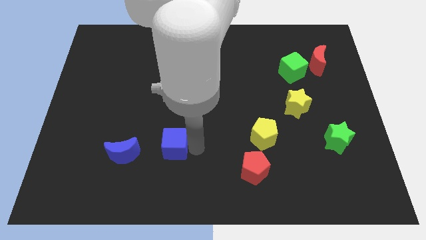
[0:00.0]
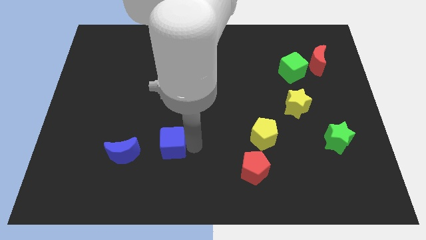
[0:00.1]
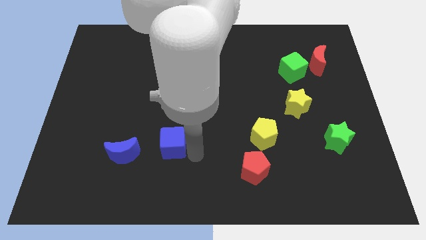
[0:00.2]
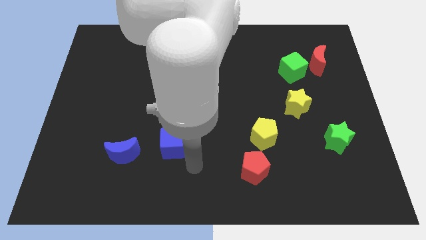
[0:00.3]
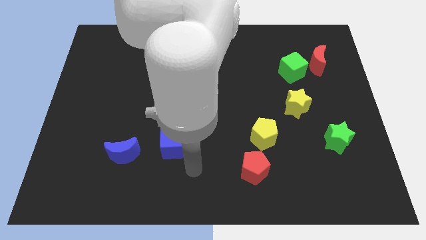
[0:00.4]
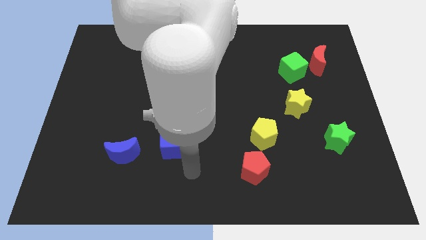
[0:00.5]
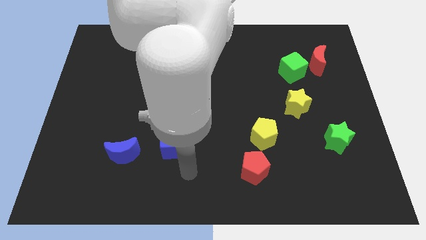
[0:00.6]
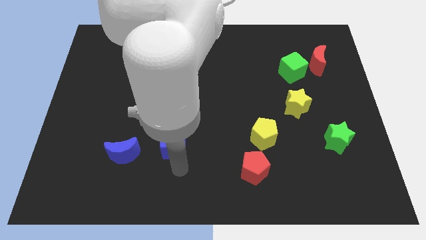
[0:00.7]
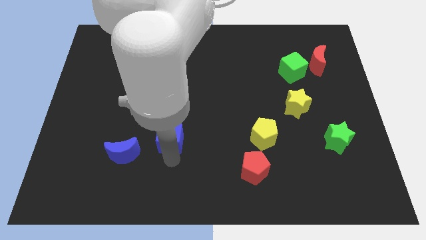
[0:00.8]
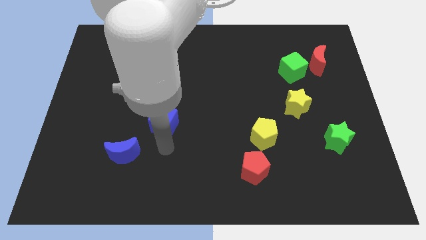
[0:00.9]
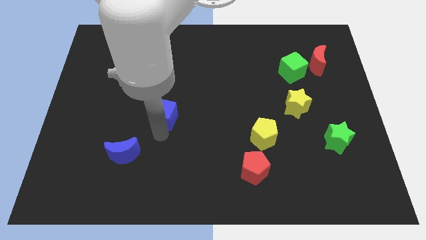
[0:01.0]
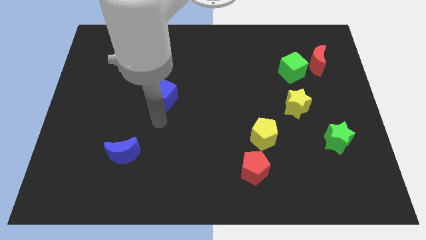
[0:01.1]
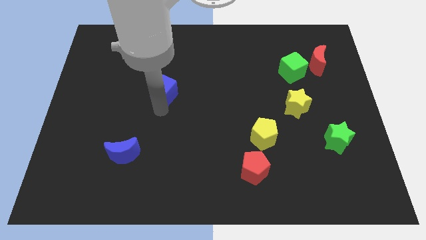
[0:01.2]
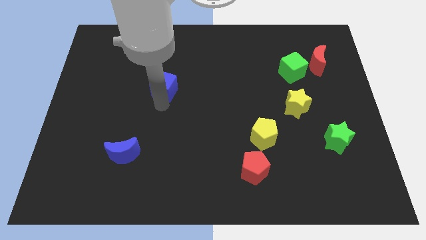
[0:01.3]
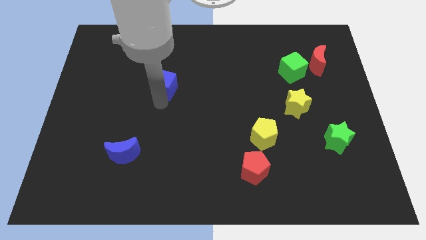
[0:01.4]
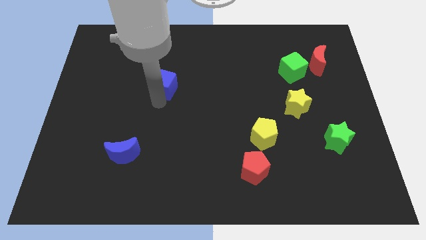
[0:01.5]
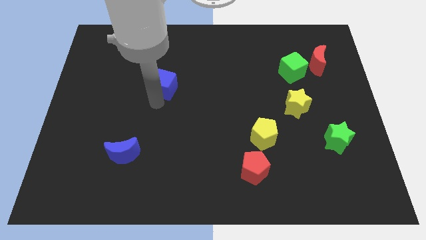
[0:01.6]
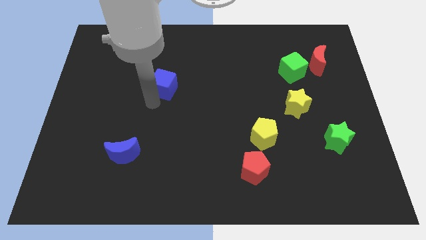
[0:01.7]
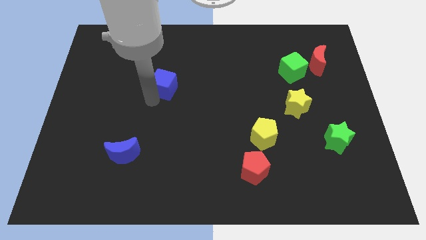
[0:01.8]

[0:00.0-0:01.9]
move blue cube upwards

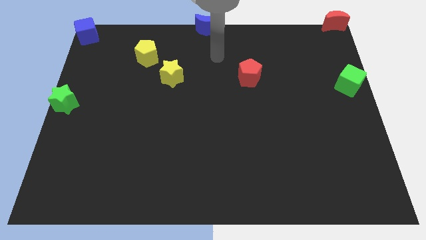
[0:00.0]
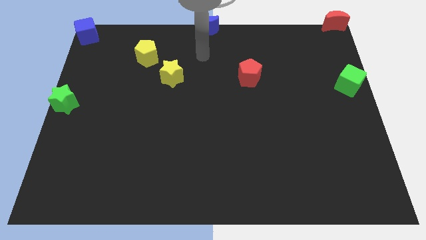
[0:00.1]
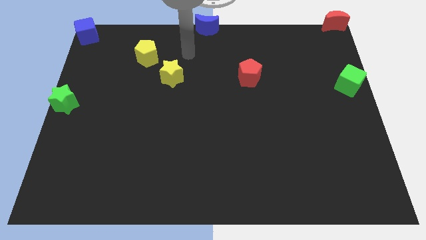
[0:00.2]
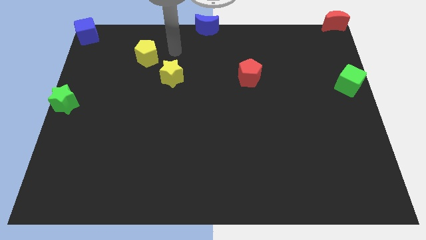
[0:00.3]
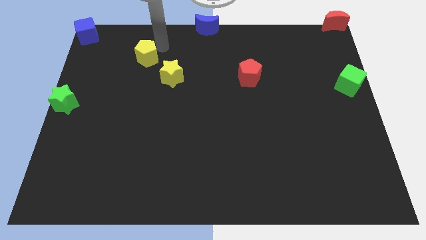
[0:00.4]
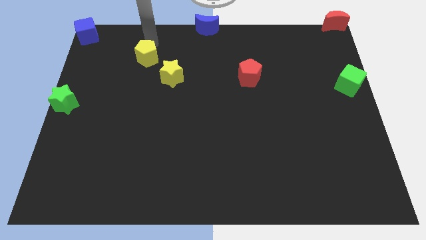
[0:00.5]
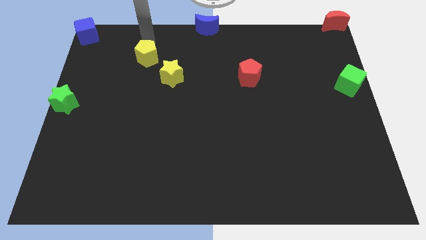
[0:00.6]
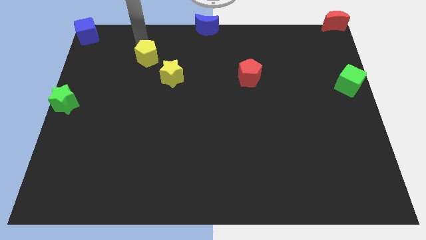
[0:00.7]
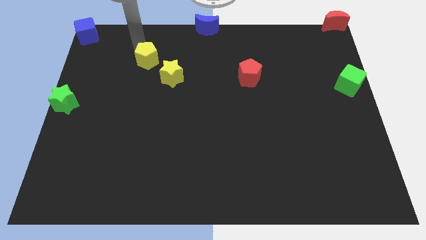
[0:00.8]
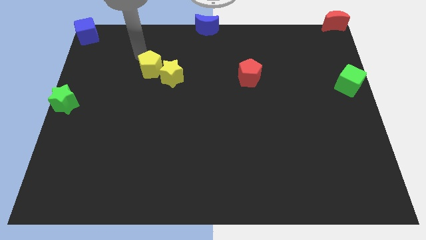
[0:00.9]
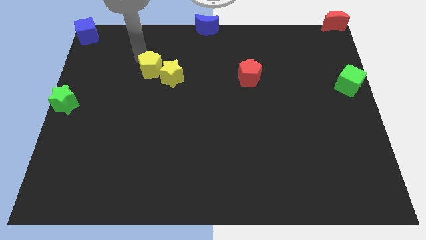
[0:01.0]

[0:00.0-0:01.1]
move the yellow pentagon close to the yellow star

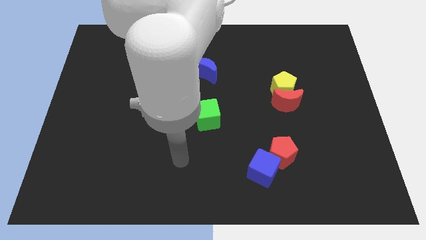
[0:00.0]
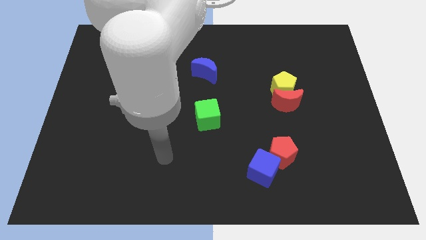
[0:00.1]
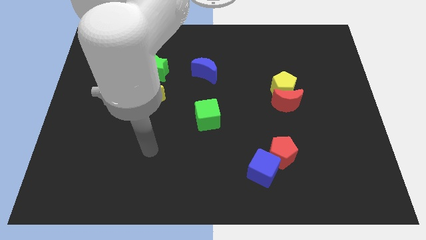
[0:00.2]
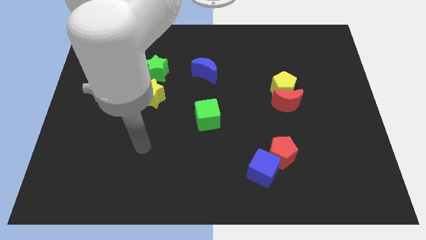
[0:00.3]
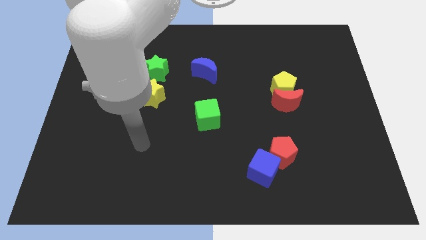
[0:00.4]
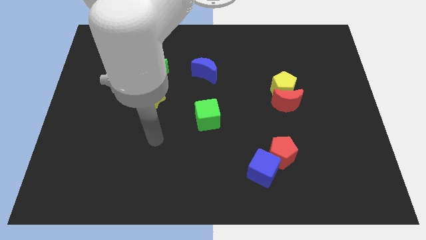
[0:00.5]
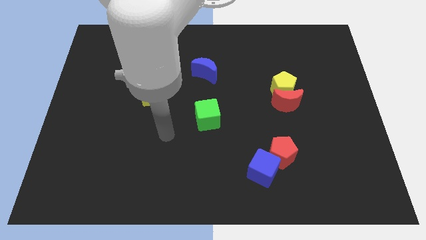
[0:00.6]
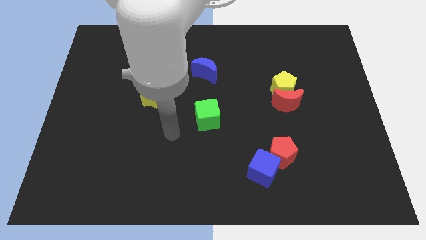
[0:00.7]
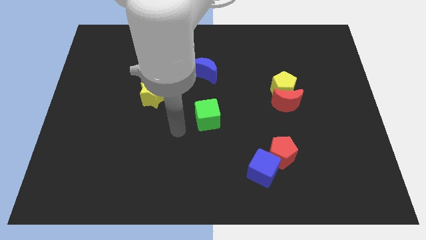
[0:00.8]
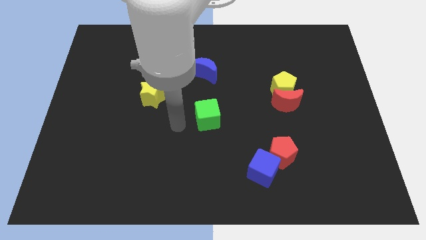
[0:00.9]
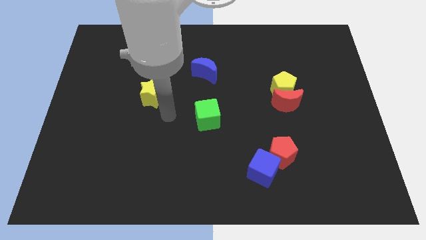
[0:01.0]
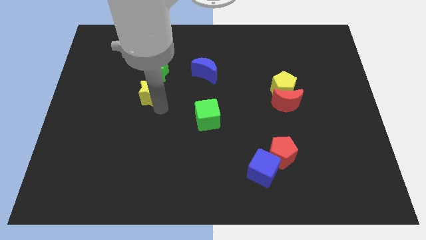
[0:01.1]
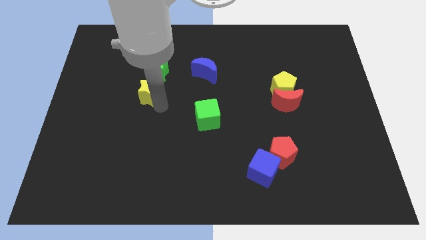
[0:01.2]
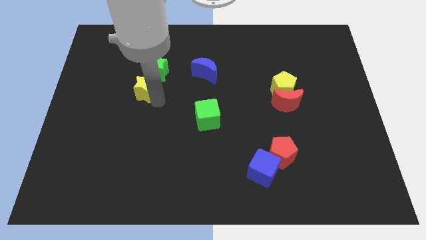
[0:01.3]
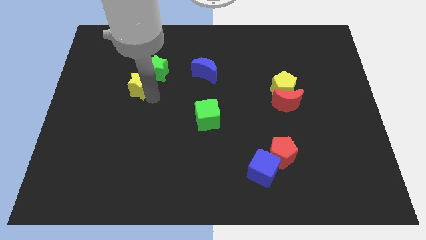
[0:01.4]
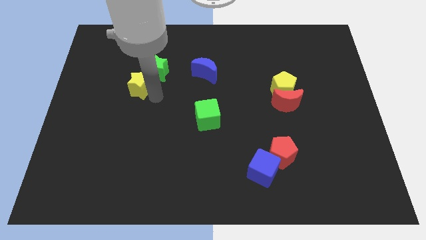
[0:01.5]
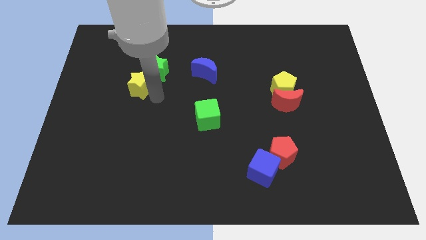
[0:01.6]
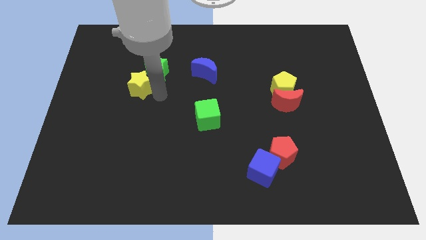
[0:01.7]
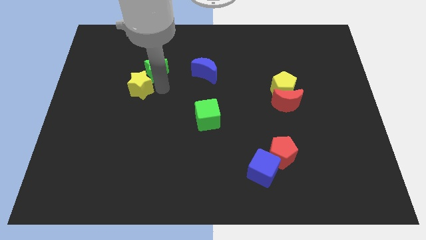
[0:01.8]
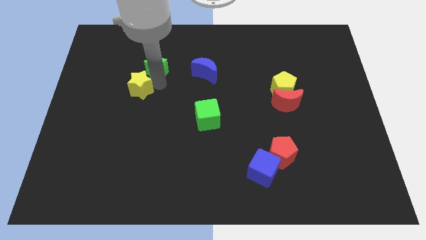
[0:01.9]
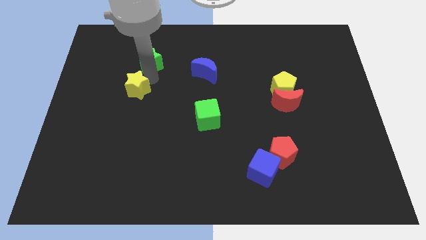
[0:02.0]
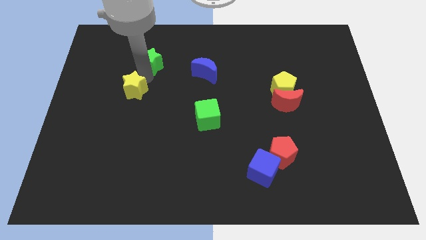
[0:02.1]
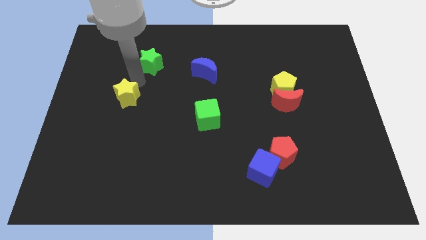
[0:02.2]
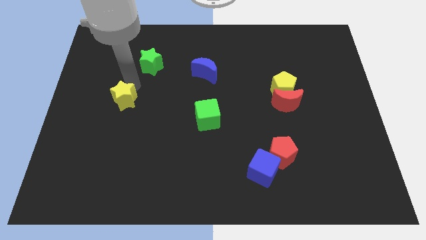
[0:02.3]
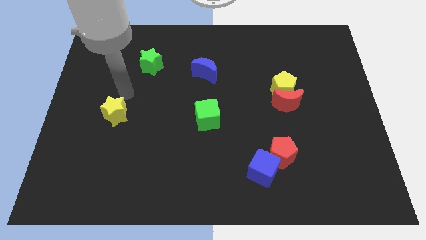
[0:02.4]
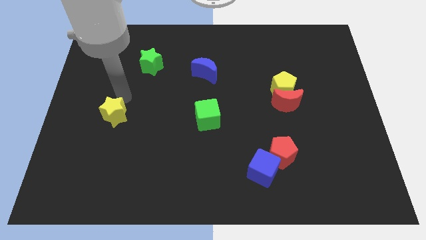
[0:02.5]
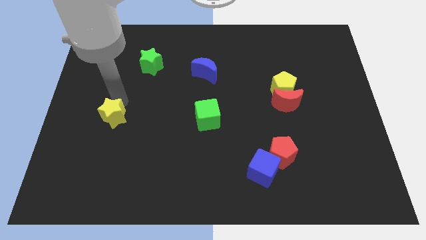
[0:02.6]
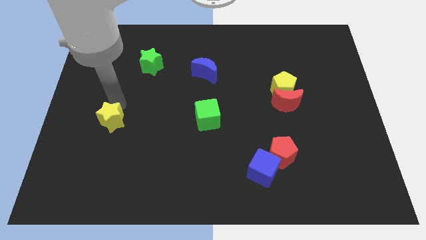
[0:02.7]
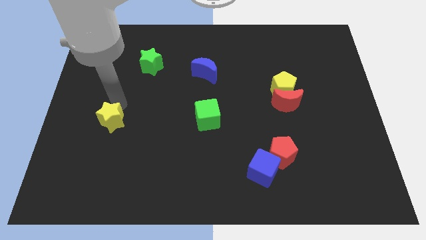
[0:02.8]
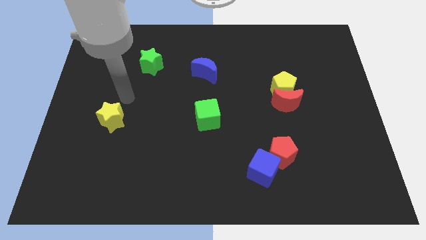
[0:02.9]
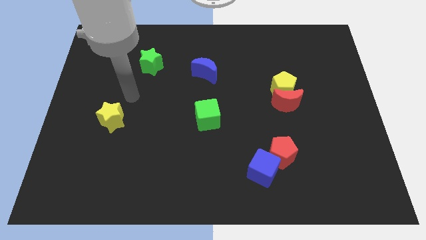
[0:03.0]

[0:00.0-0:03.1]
push the yellow star to the left of the green cube

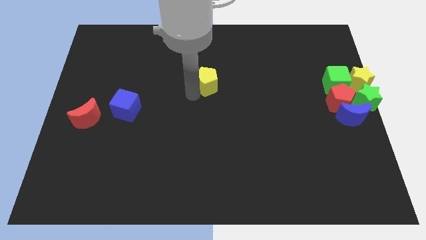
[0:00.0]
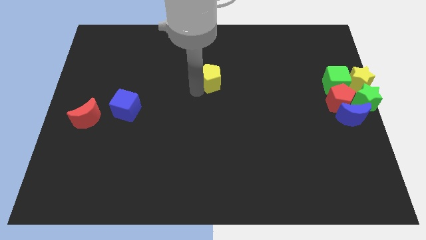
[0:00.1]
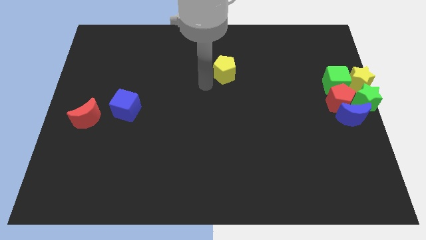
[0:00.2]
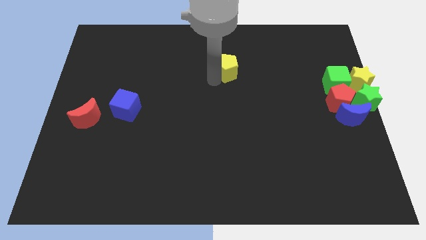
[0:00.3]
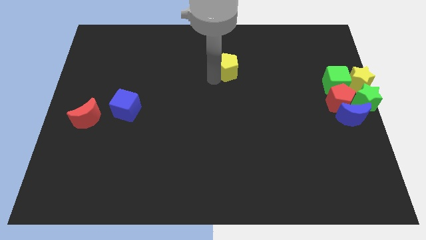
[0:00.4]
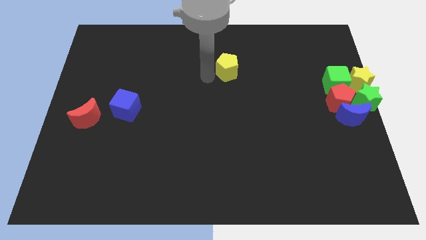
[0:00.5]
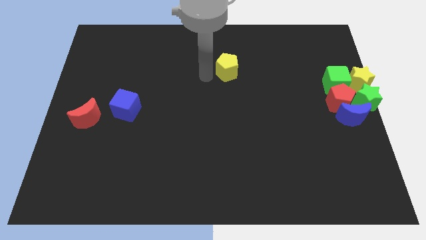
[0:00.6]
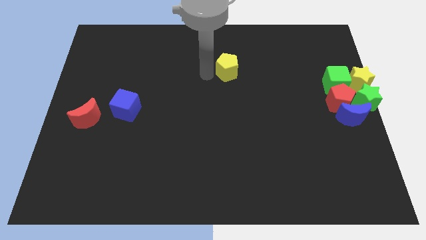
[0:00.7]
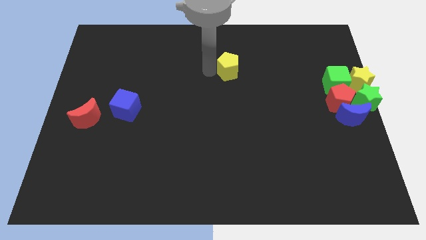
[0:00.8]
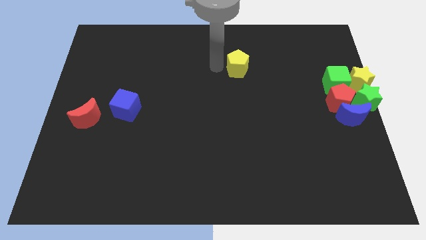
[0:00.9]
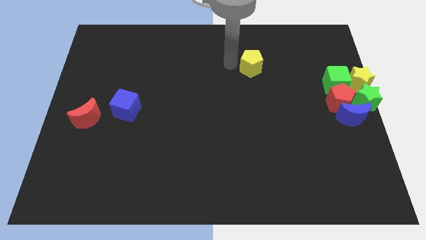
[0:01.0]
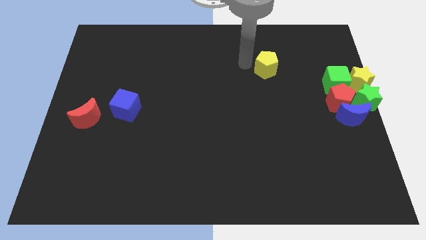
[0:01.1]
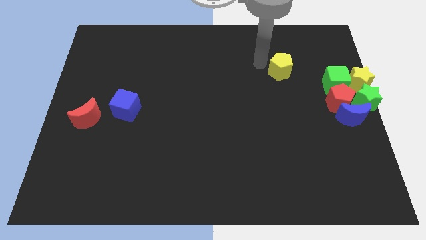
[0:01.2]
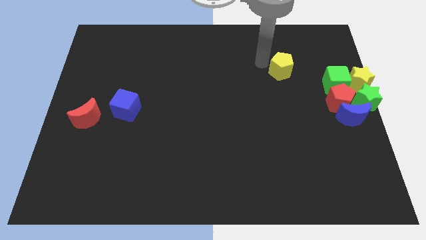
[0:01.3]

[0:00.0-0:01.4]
push the yellow pentagon to the right of the board

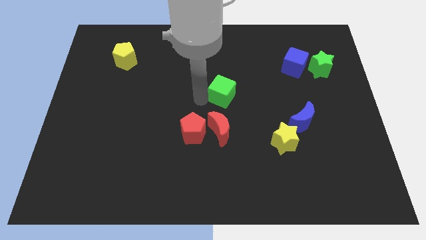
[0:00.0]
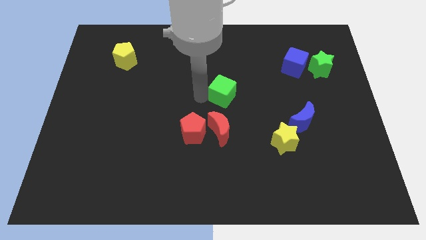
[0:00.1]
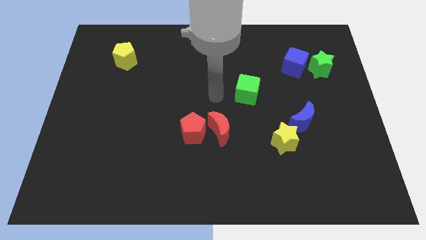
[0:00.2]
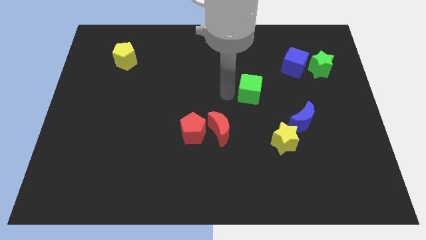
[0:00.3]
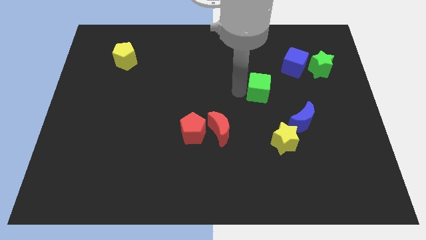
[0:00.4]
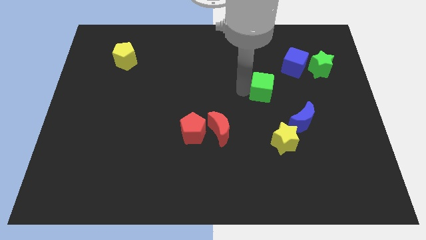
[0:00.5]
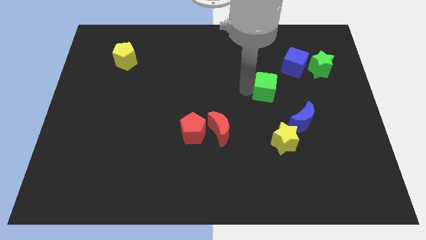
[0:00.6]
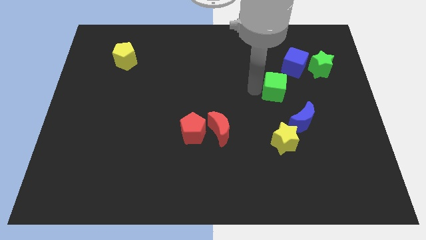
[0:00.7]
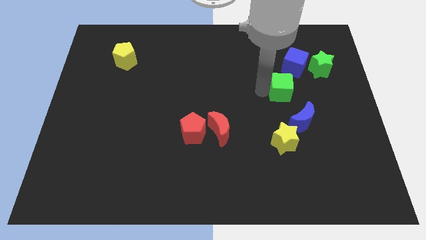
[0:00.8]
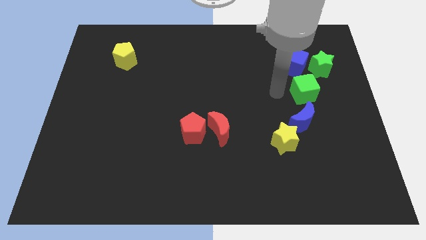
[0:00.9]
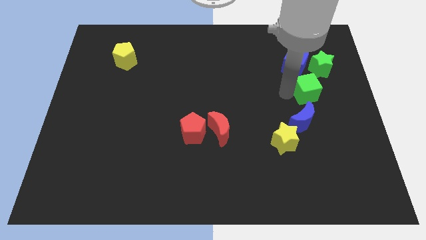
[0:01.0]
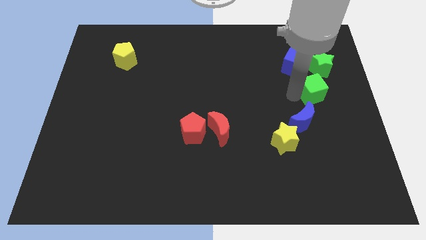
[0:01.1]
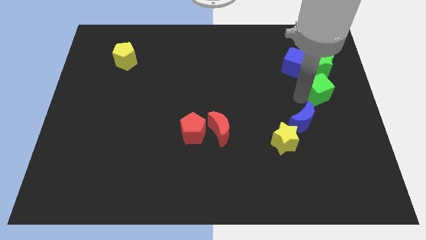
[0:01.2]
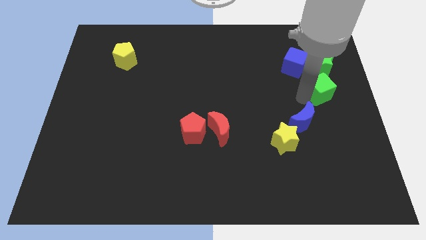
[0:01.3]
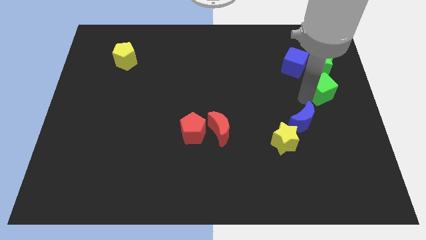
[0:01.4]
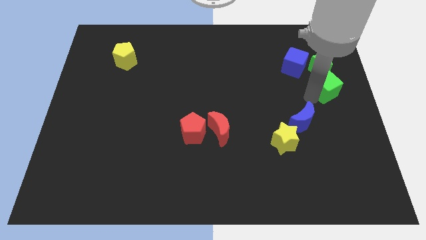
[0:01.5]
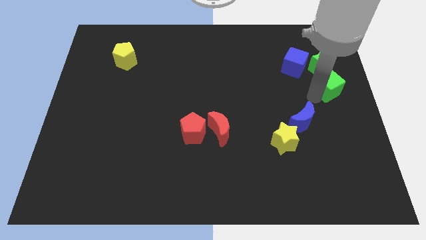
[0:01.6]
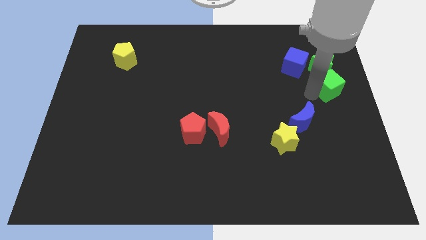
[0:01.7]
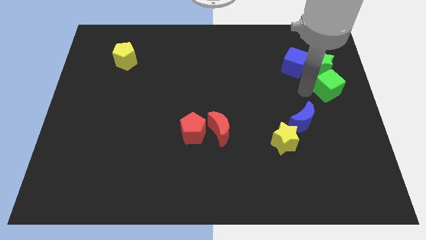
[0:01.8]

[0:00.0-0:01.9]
move the green cube to the bottom of the green star
